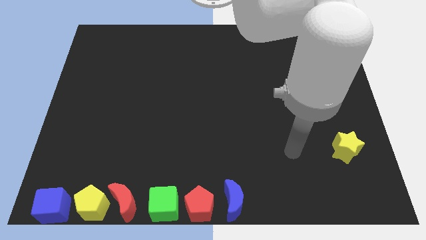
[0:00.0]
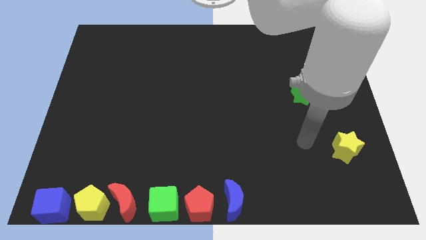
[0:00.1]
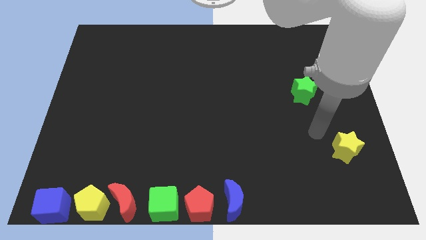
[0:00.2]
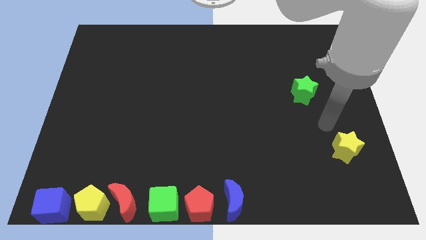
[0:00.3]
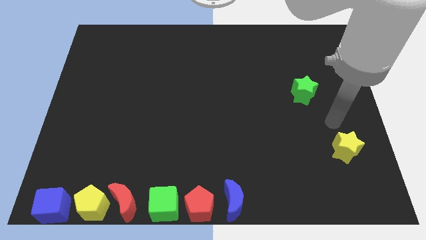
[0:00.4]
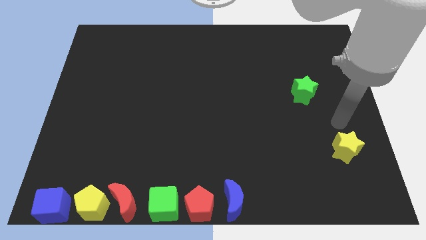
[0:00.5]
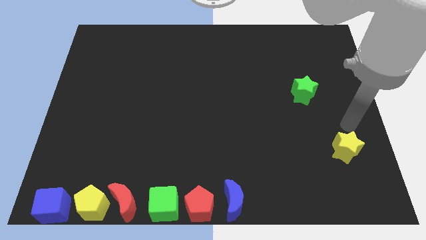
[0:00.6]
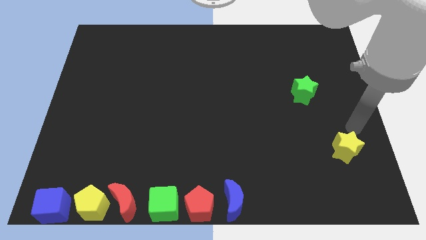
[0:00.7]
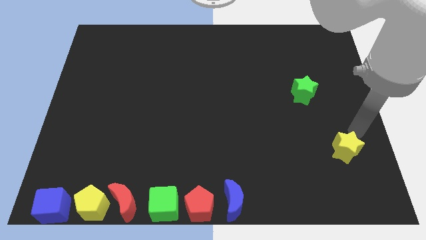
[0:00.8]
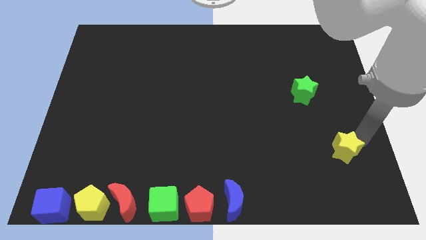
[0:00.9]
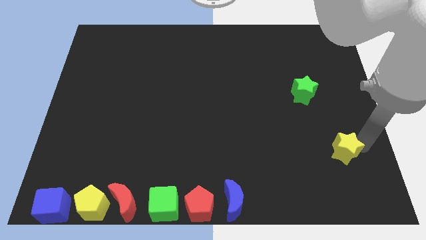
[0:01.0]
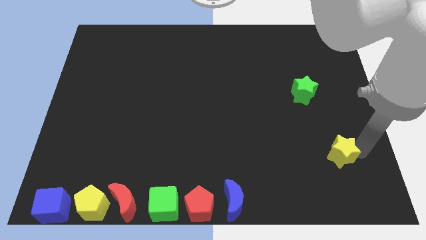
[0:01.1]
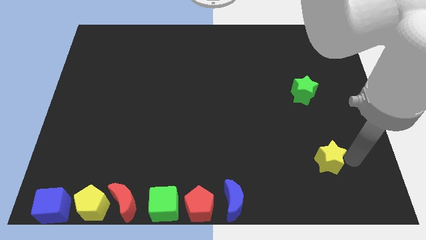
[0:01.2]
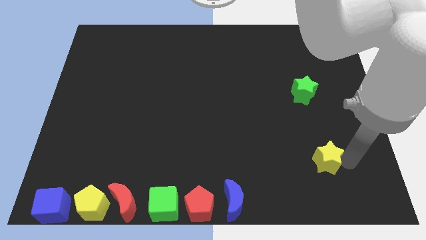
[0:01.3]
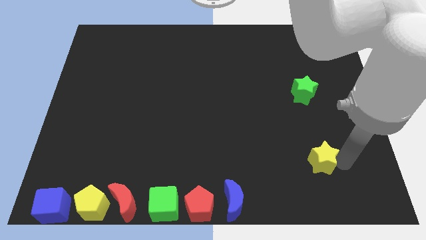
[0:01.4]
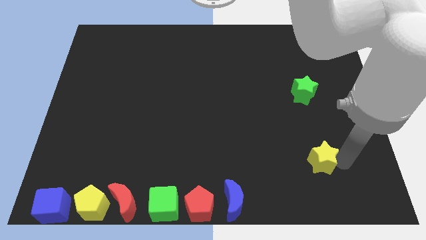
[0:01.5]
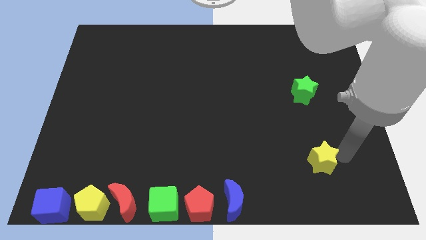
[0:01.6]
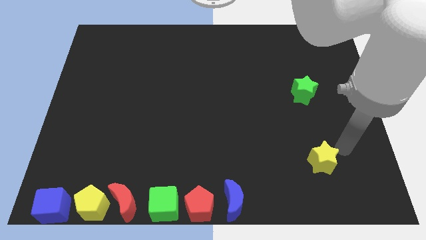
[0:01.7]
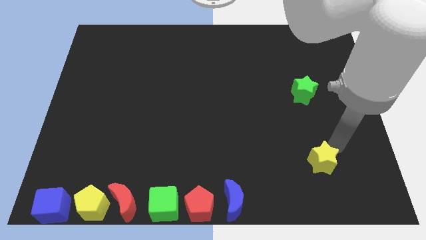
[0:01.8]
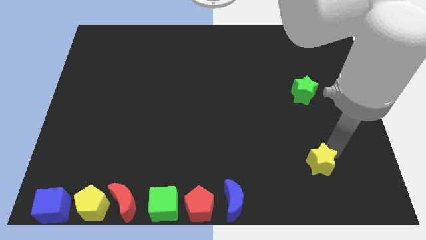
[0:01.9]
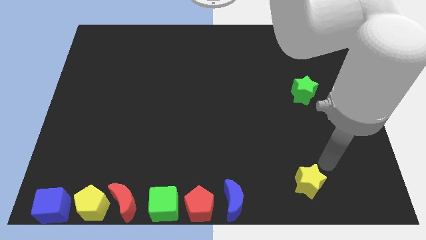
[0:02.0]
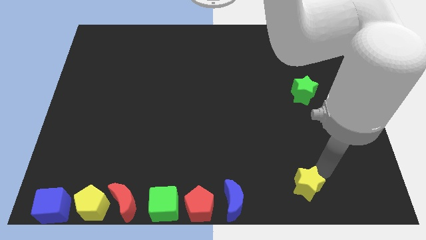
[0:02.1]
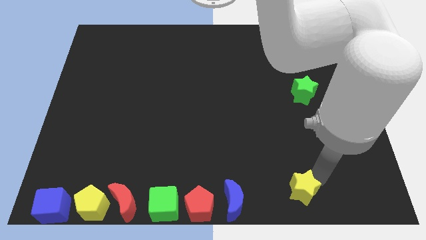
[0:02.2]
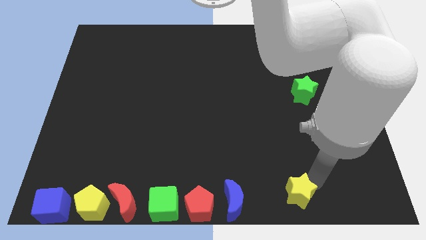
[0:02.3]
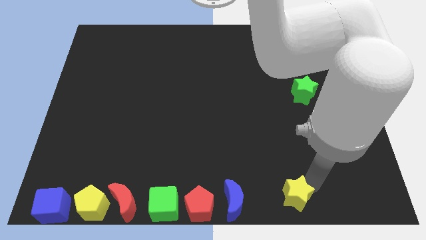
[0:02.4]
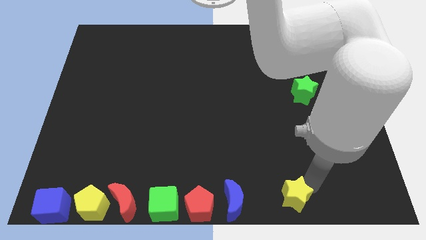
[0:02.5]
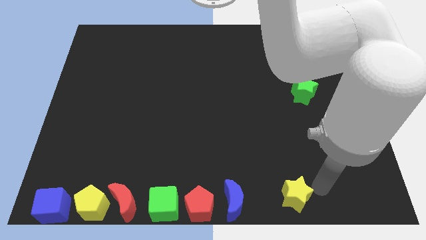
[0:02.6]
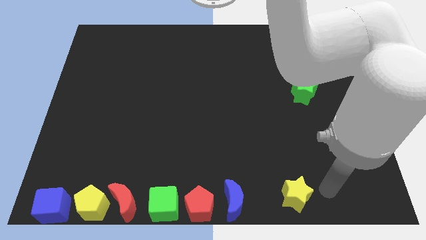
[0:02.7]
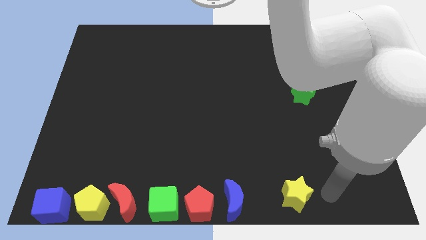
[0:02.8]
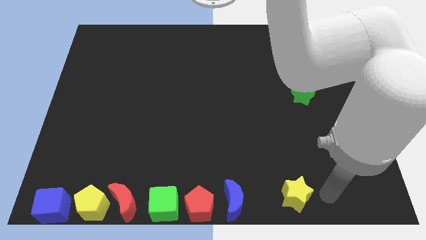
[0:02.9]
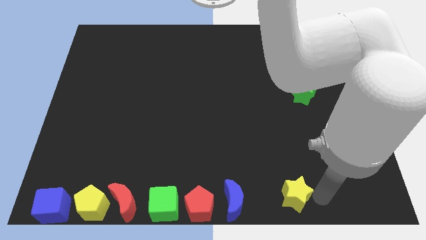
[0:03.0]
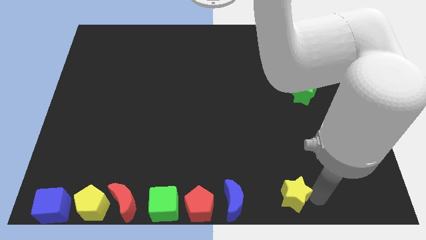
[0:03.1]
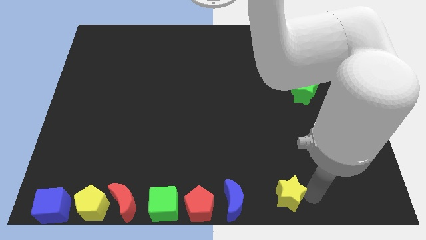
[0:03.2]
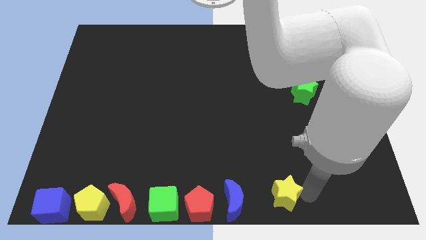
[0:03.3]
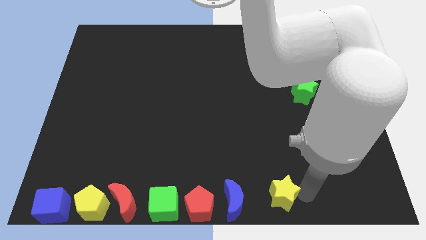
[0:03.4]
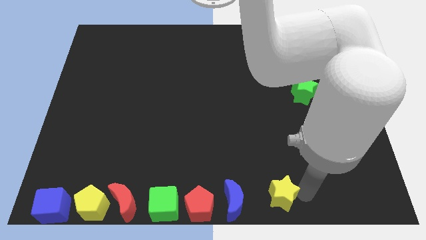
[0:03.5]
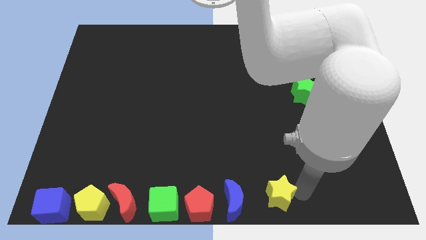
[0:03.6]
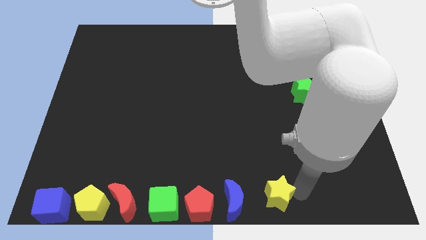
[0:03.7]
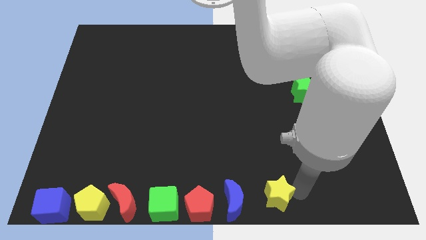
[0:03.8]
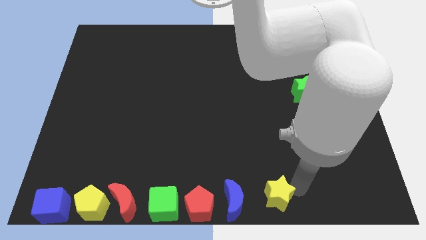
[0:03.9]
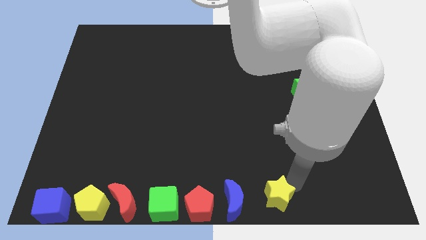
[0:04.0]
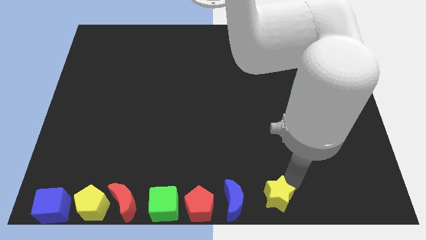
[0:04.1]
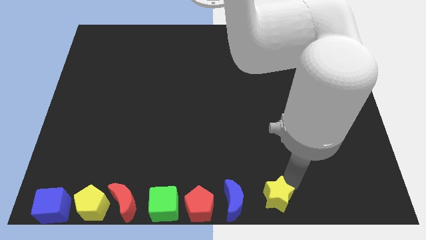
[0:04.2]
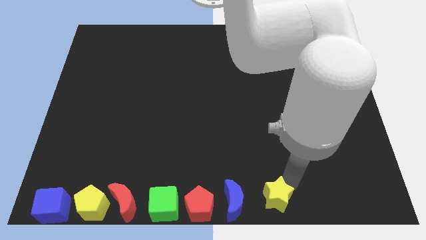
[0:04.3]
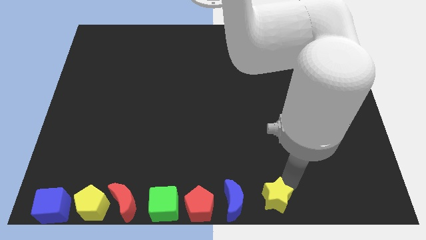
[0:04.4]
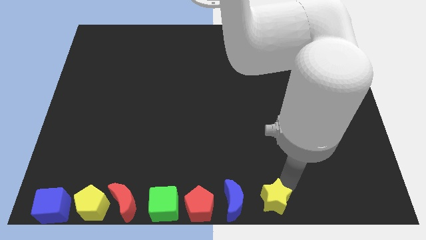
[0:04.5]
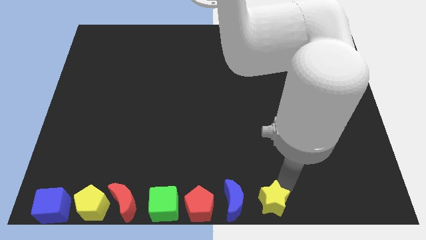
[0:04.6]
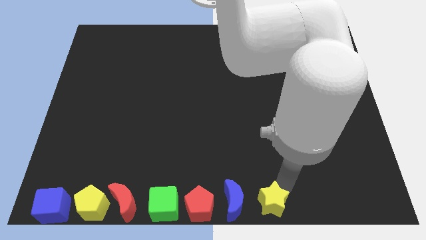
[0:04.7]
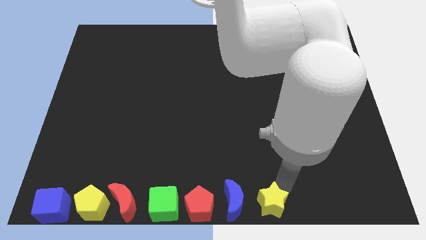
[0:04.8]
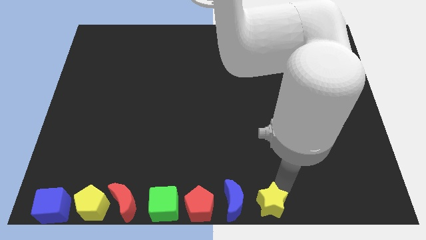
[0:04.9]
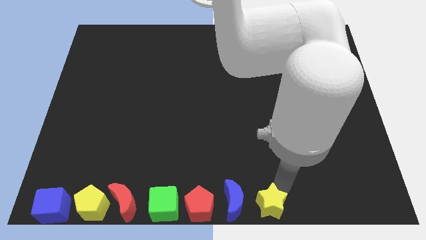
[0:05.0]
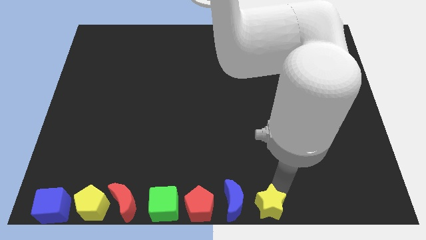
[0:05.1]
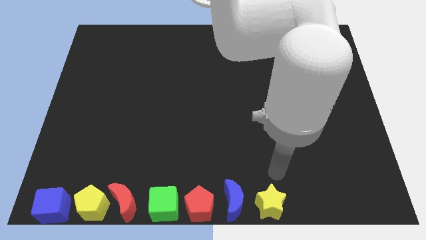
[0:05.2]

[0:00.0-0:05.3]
push the yellow star downwards to the right side of the blue moon

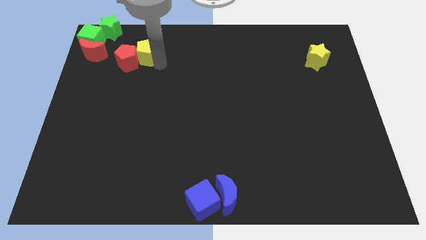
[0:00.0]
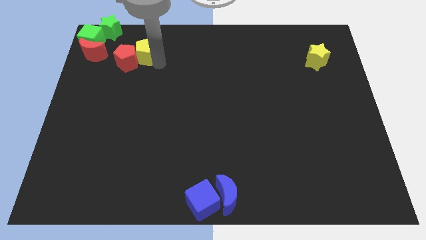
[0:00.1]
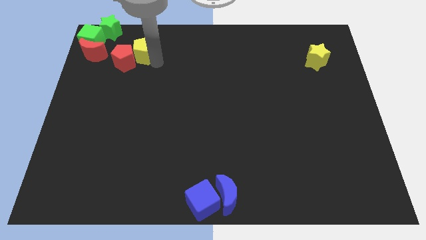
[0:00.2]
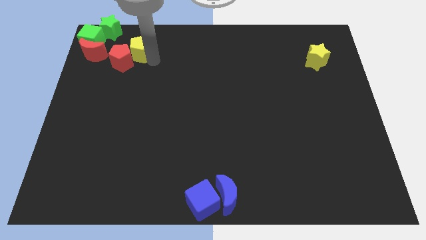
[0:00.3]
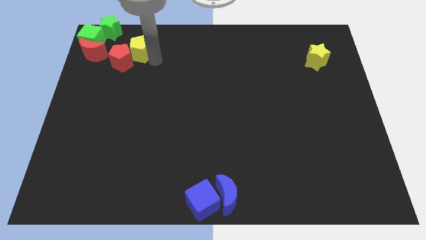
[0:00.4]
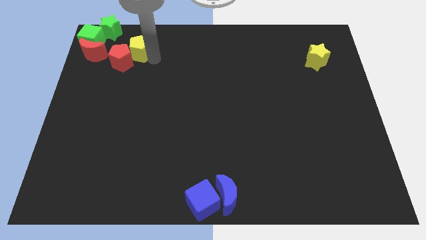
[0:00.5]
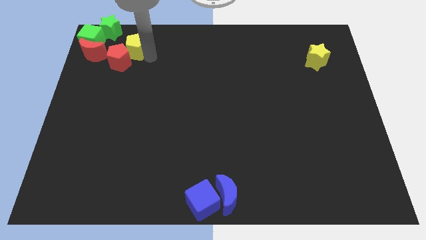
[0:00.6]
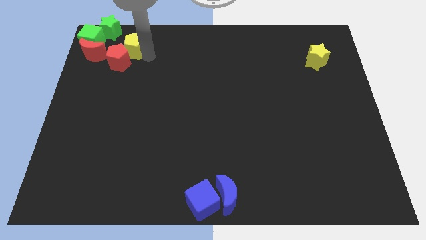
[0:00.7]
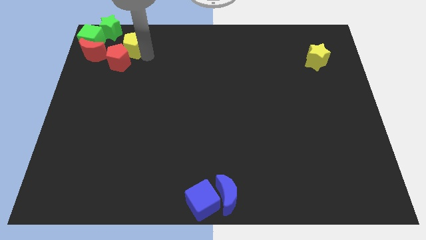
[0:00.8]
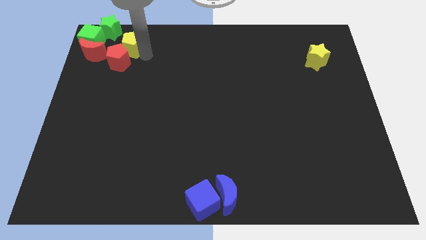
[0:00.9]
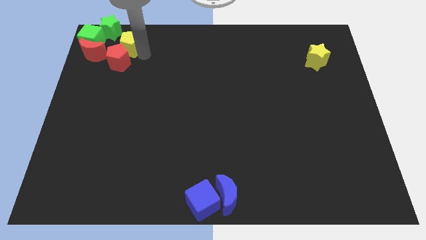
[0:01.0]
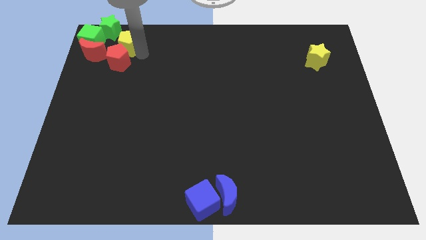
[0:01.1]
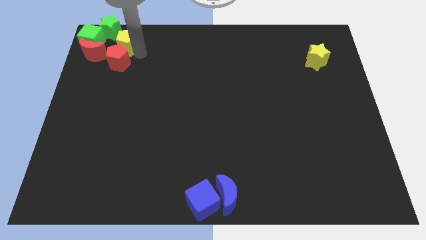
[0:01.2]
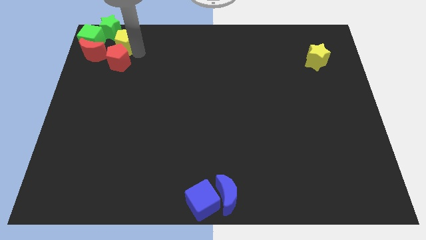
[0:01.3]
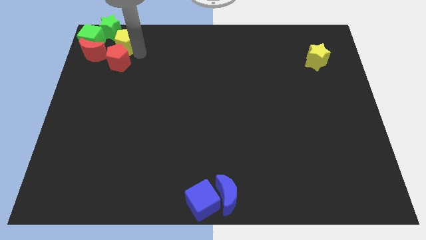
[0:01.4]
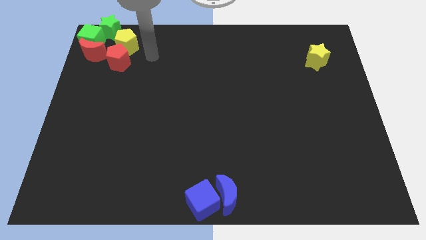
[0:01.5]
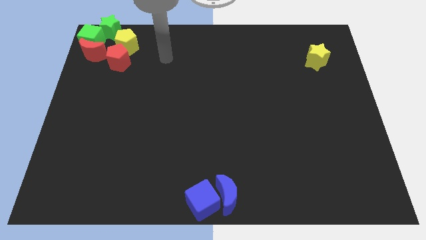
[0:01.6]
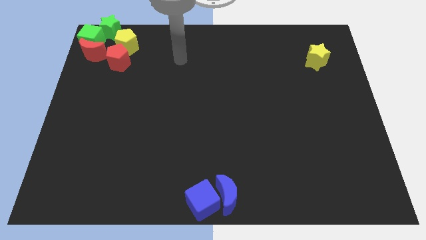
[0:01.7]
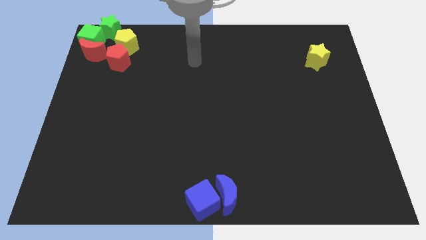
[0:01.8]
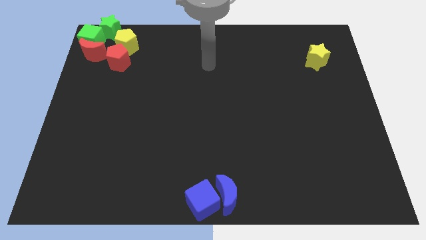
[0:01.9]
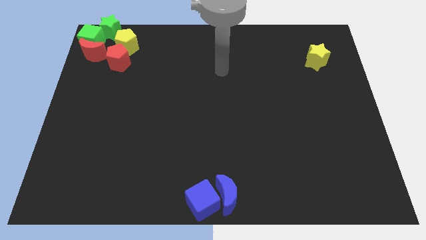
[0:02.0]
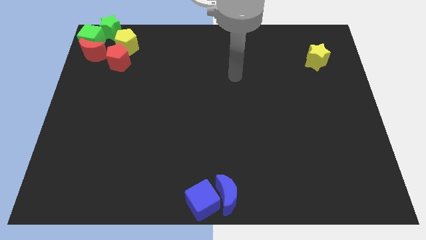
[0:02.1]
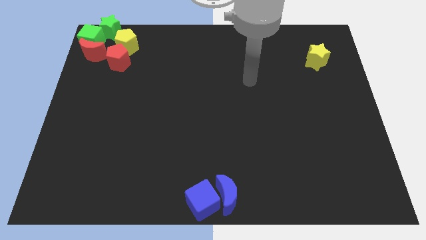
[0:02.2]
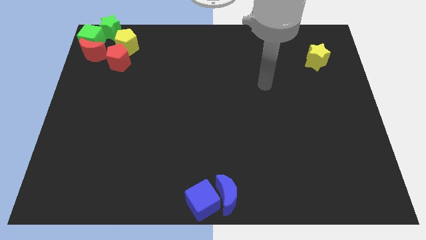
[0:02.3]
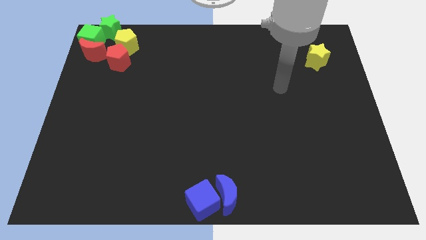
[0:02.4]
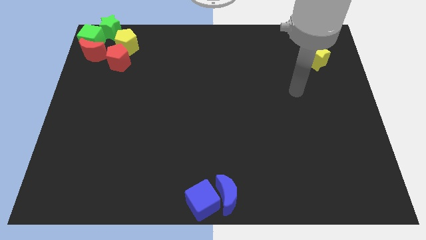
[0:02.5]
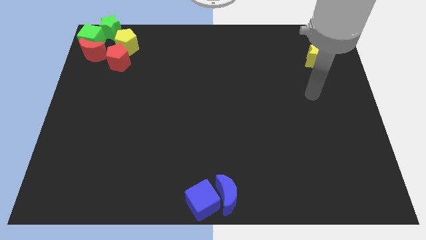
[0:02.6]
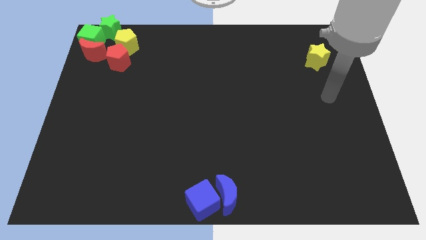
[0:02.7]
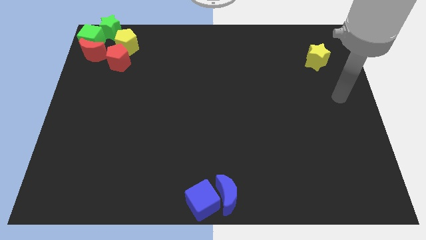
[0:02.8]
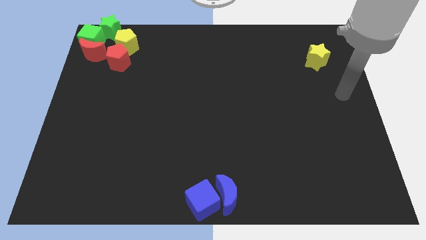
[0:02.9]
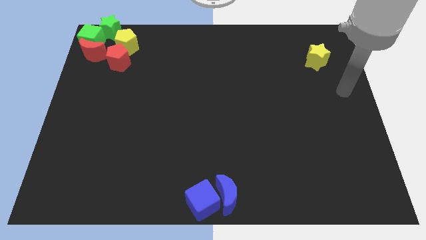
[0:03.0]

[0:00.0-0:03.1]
place yellow pentagon on top of red pentagon

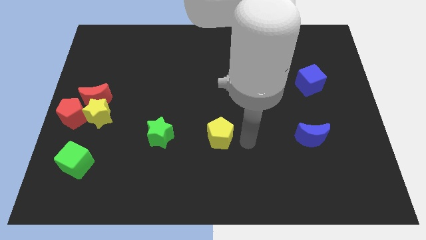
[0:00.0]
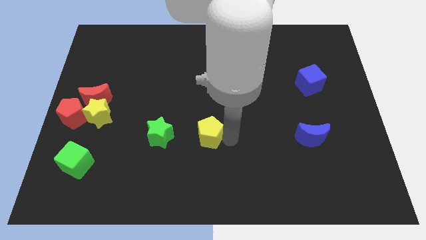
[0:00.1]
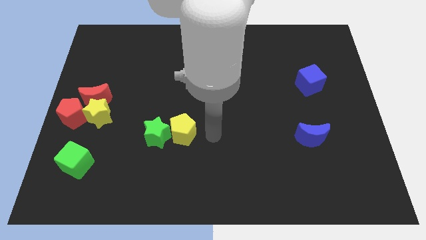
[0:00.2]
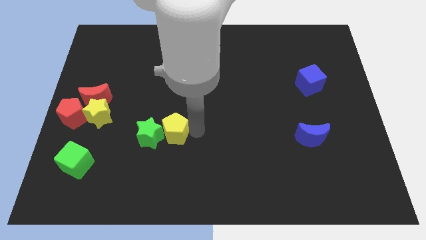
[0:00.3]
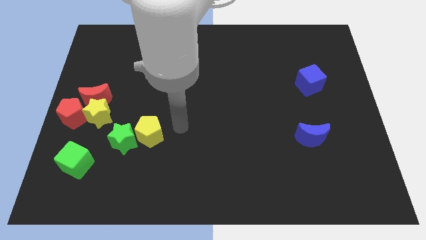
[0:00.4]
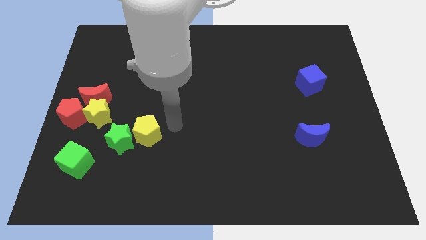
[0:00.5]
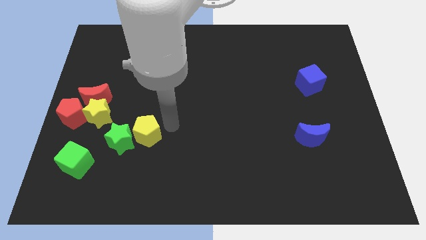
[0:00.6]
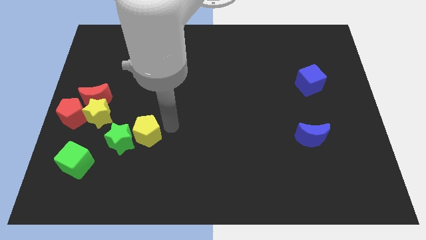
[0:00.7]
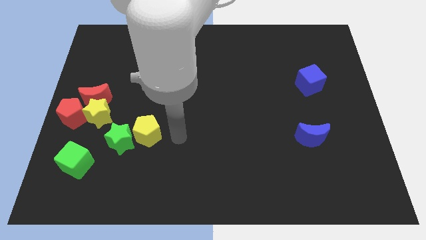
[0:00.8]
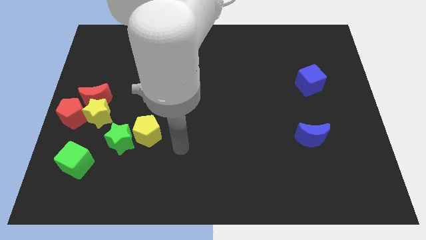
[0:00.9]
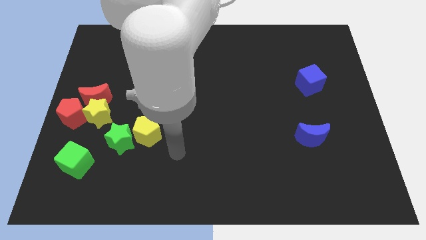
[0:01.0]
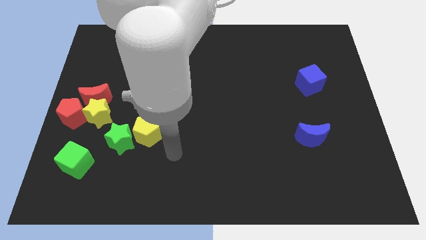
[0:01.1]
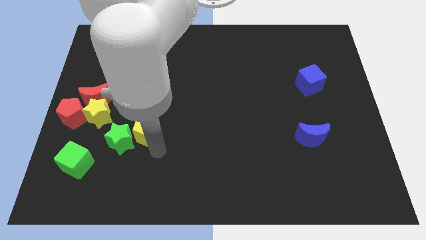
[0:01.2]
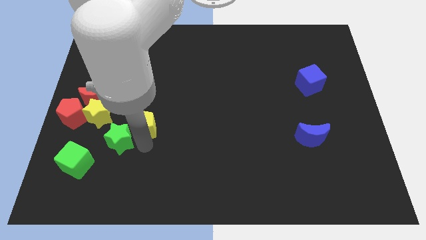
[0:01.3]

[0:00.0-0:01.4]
push the yellow pentagon into the green star
